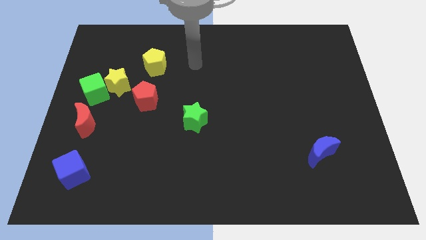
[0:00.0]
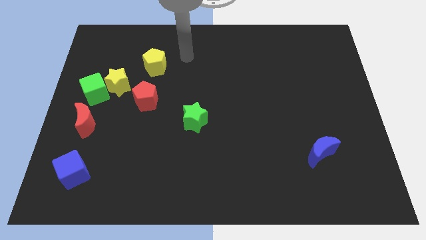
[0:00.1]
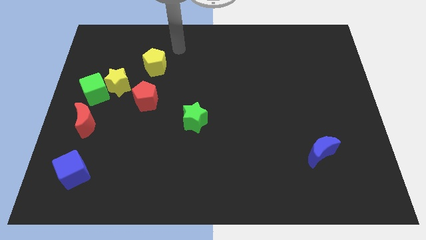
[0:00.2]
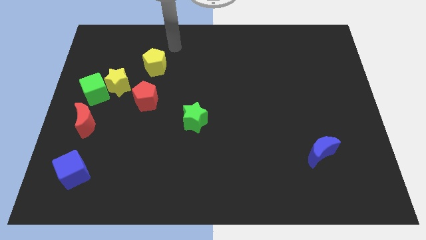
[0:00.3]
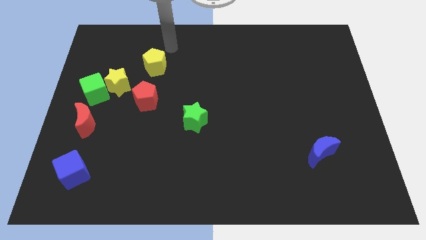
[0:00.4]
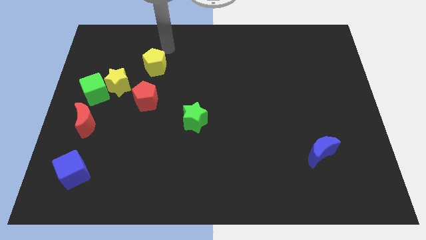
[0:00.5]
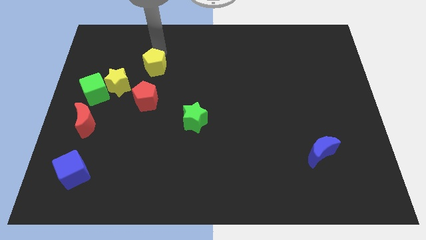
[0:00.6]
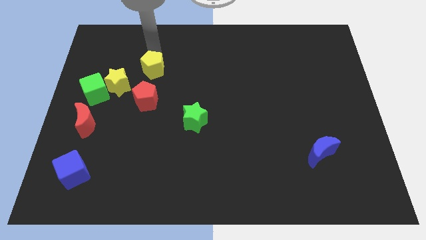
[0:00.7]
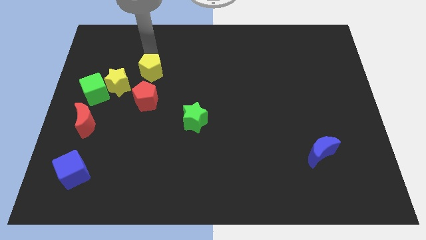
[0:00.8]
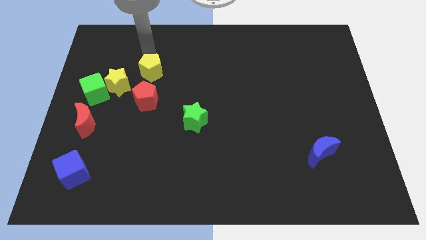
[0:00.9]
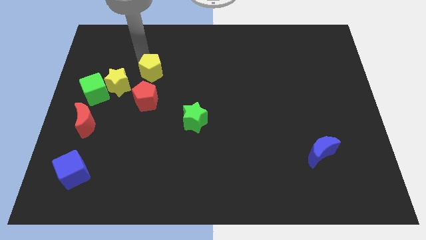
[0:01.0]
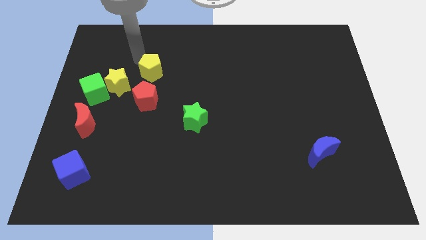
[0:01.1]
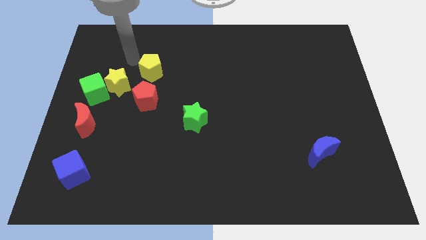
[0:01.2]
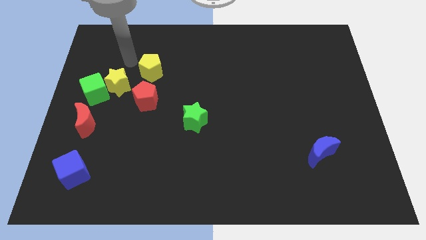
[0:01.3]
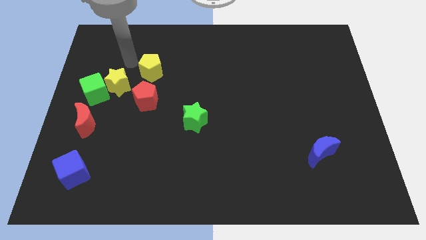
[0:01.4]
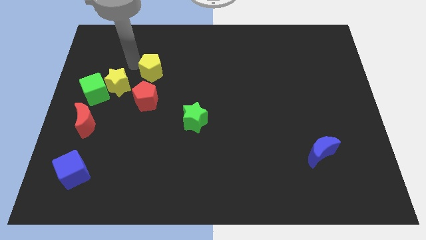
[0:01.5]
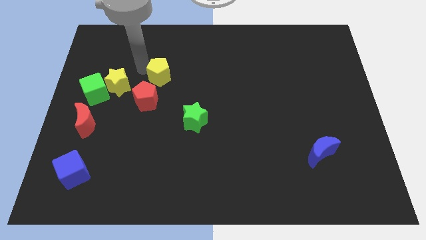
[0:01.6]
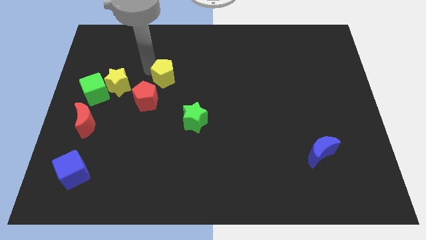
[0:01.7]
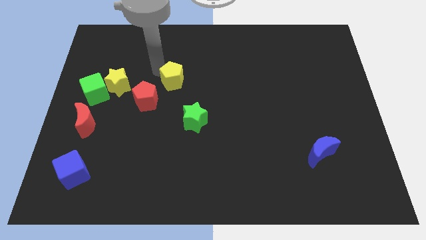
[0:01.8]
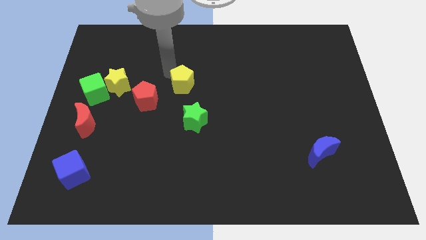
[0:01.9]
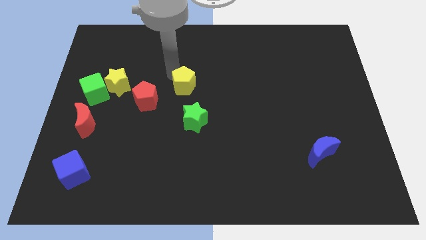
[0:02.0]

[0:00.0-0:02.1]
slide the yellow pentagon diagonally top right to the red pentagon

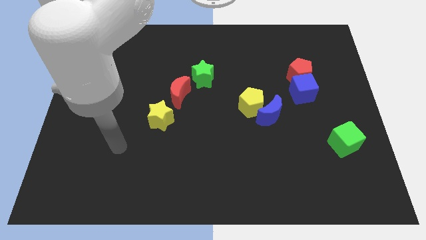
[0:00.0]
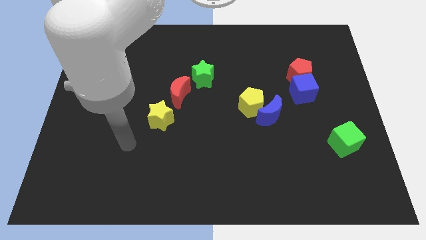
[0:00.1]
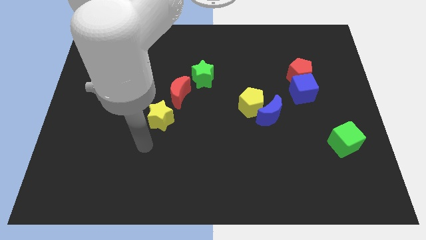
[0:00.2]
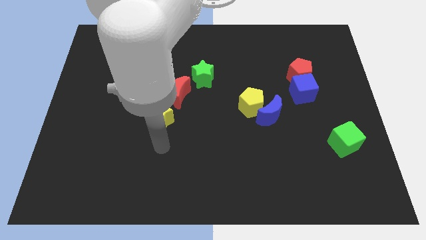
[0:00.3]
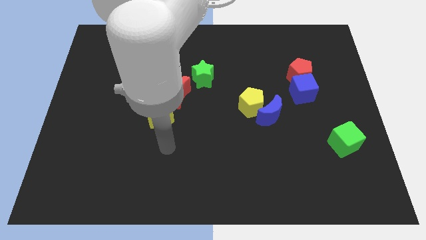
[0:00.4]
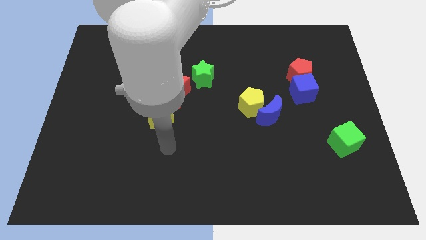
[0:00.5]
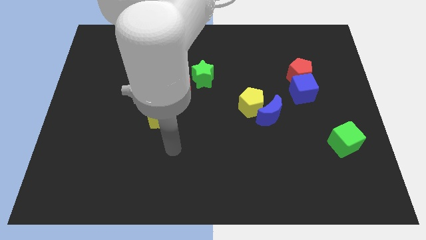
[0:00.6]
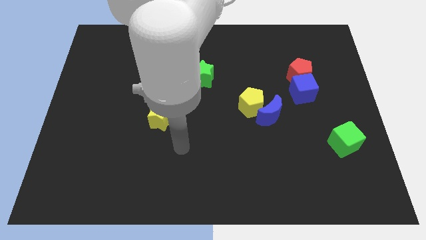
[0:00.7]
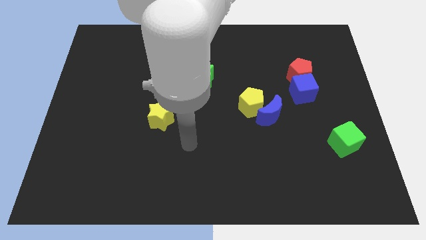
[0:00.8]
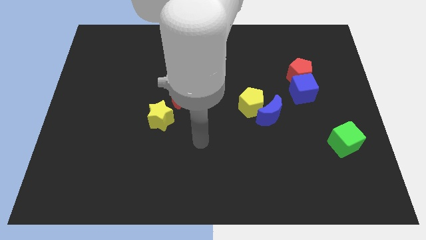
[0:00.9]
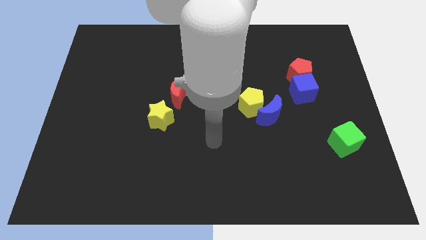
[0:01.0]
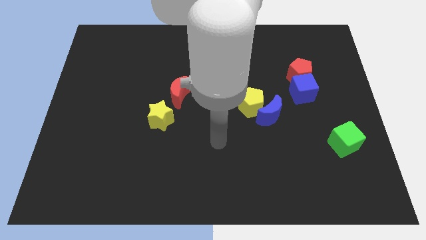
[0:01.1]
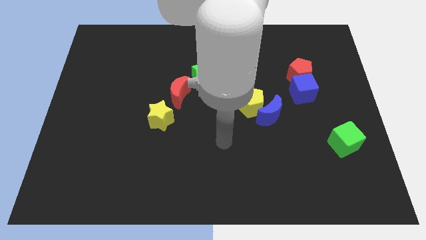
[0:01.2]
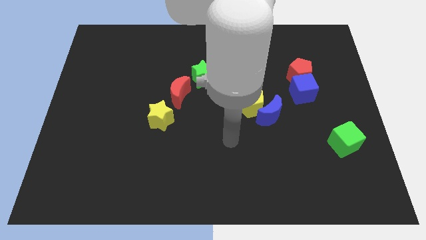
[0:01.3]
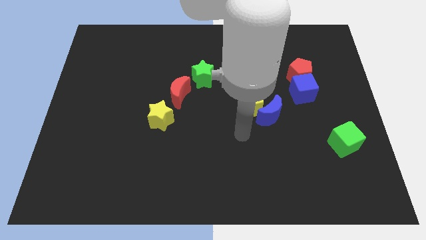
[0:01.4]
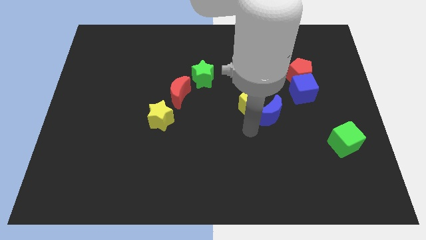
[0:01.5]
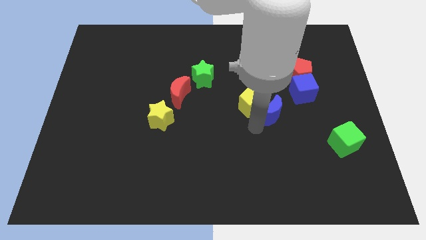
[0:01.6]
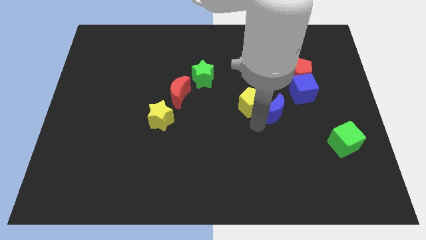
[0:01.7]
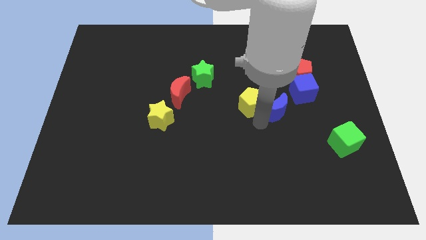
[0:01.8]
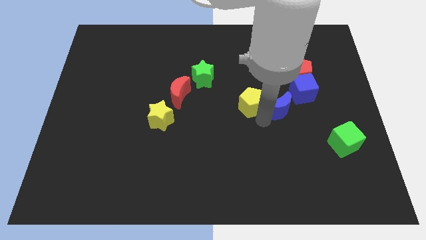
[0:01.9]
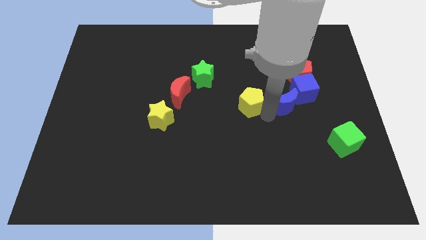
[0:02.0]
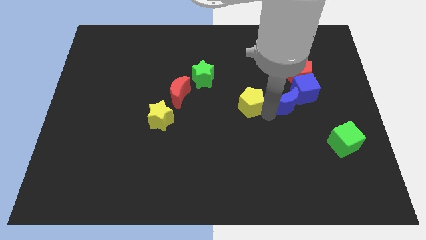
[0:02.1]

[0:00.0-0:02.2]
place the blue cube in between the yellow pentagon and the blue cube

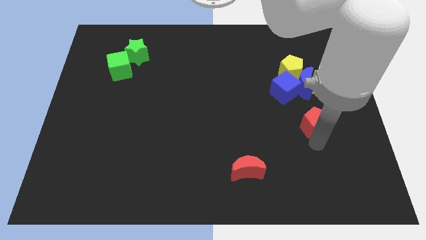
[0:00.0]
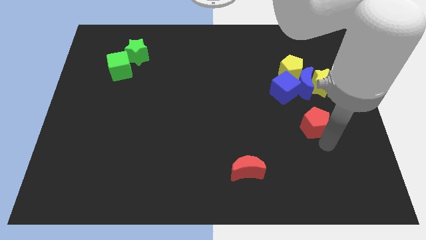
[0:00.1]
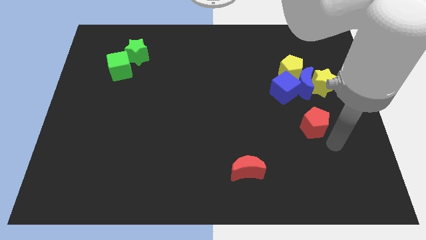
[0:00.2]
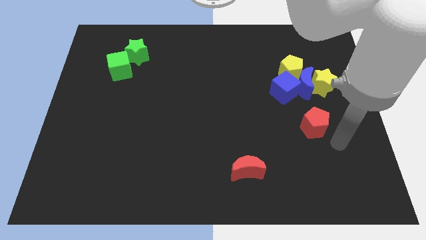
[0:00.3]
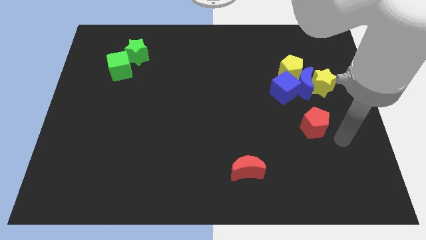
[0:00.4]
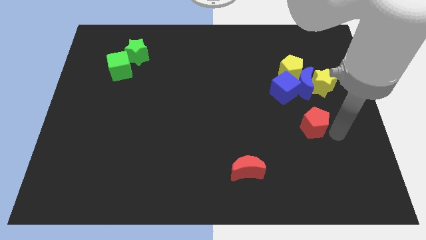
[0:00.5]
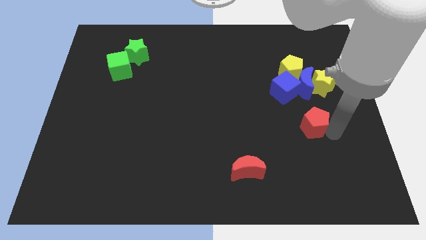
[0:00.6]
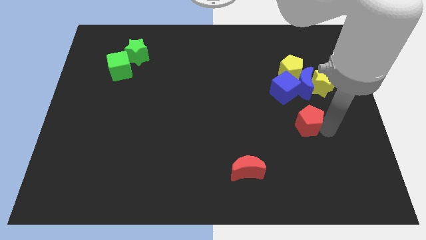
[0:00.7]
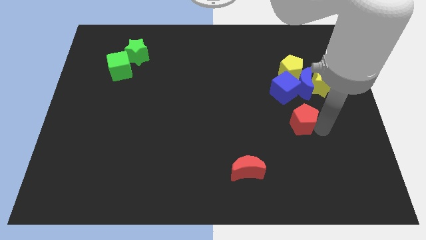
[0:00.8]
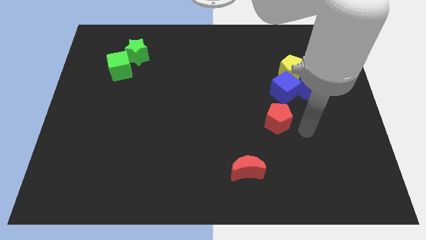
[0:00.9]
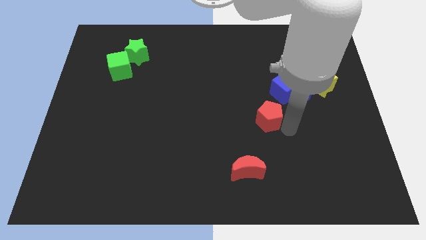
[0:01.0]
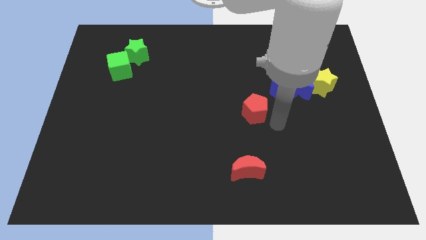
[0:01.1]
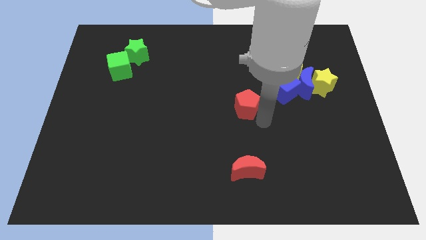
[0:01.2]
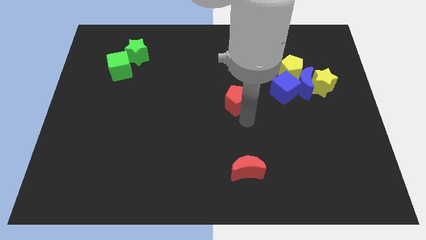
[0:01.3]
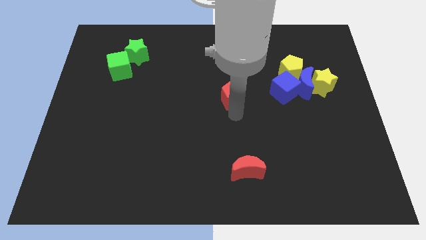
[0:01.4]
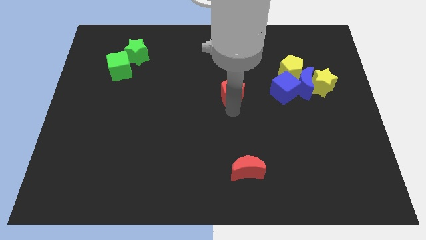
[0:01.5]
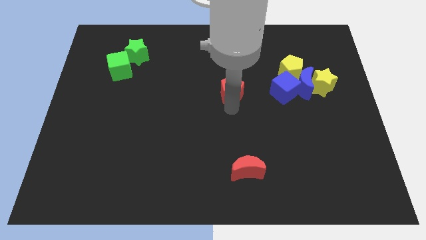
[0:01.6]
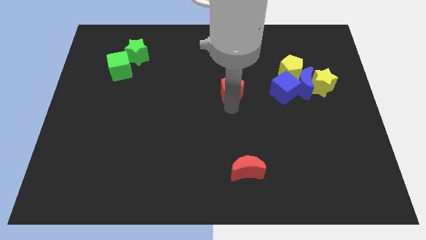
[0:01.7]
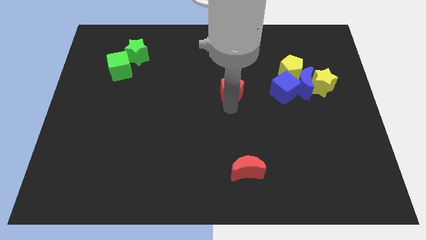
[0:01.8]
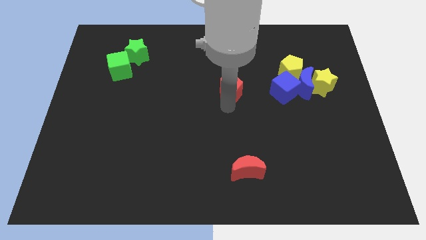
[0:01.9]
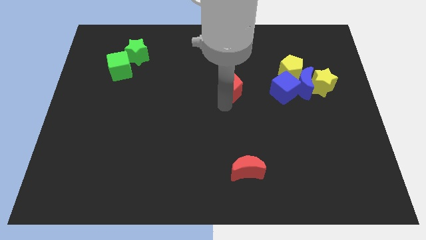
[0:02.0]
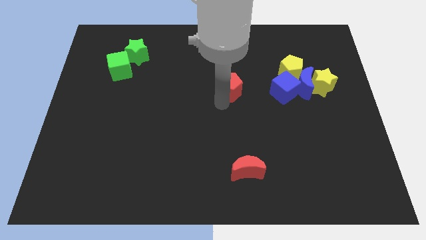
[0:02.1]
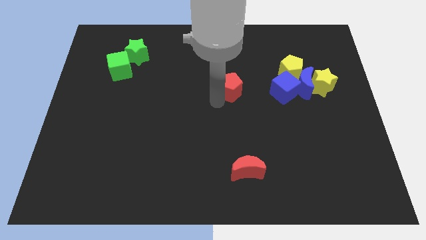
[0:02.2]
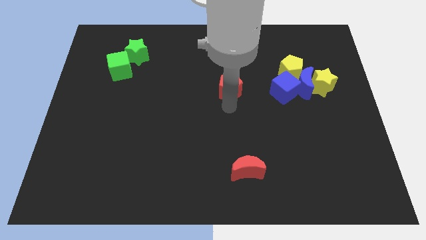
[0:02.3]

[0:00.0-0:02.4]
push the red pentagon to the left of the blue cube

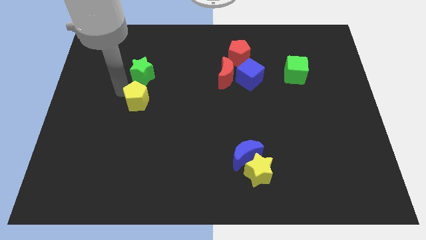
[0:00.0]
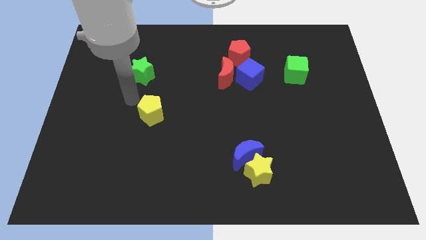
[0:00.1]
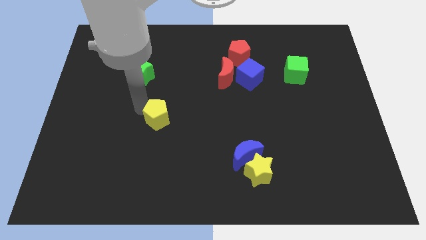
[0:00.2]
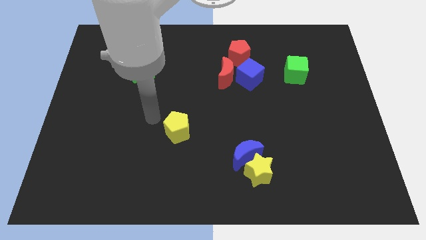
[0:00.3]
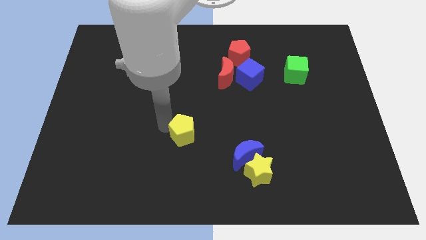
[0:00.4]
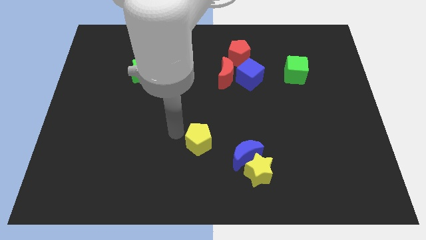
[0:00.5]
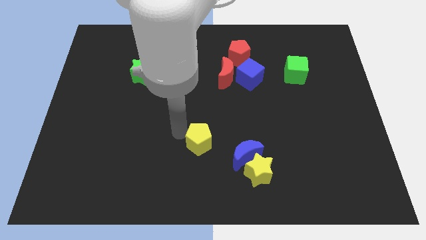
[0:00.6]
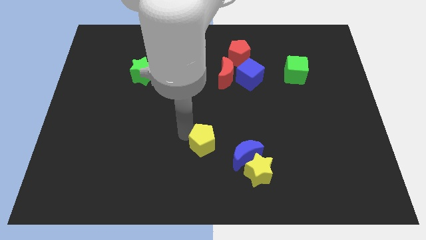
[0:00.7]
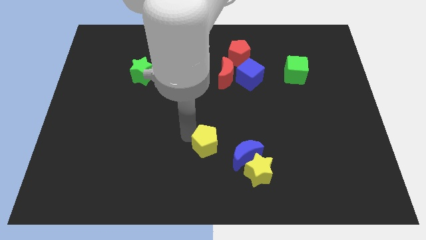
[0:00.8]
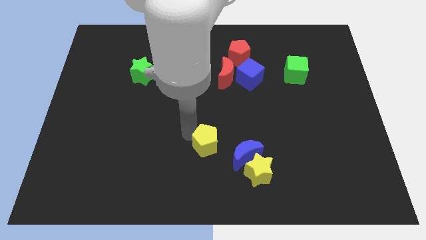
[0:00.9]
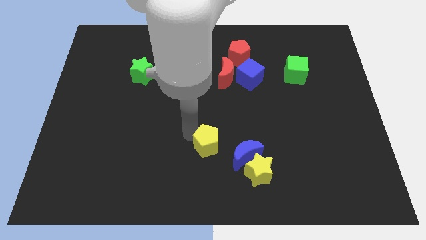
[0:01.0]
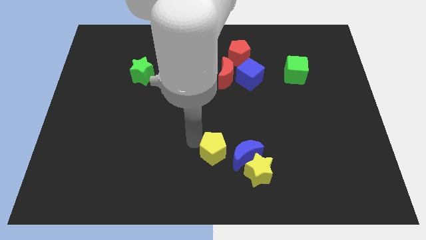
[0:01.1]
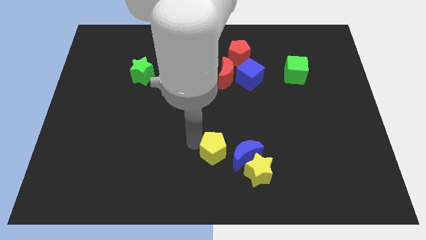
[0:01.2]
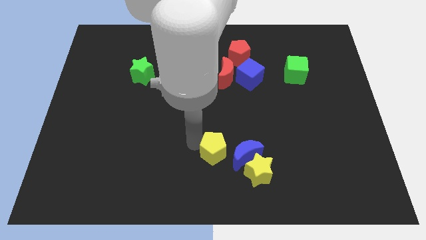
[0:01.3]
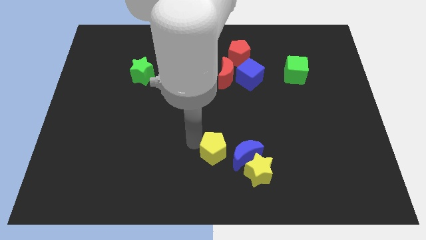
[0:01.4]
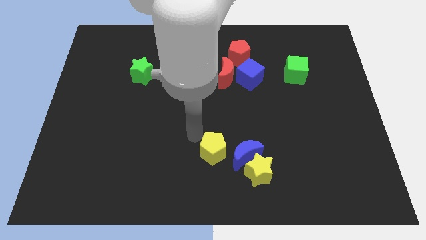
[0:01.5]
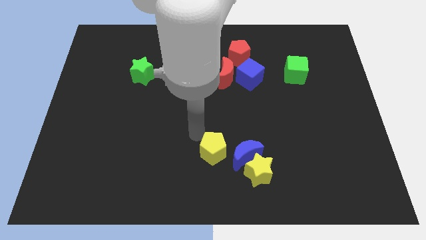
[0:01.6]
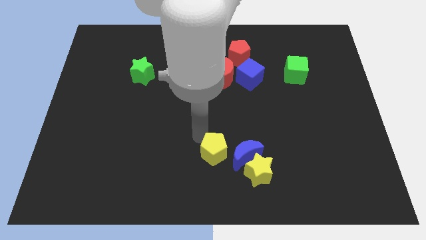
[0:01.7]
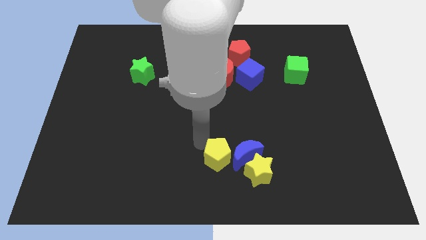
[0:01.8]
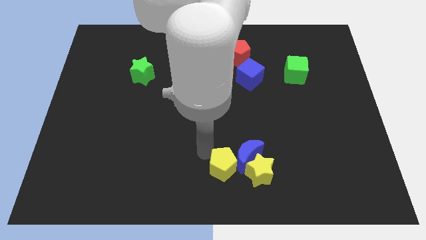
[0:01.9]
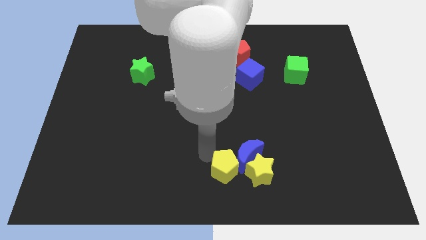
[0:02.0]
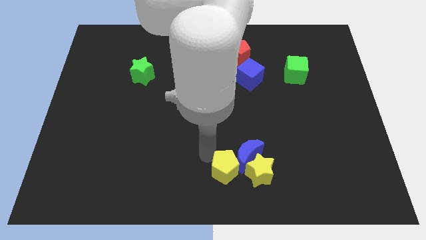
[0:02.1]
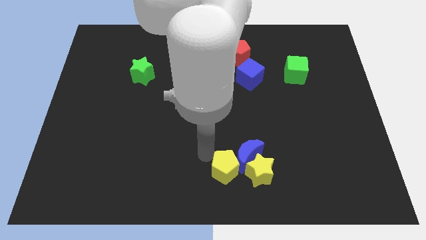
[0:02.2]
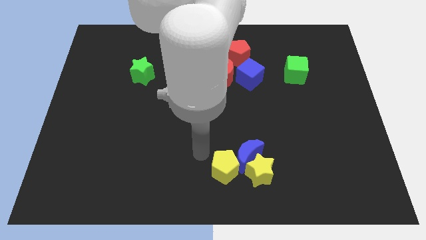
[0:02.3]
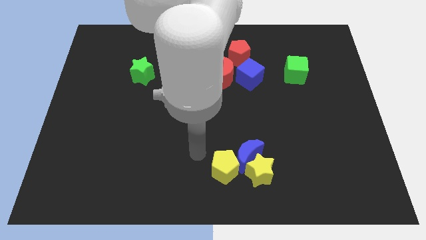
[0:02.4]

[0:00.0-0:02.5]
push the yellow pentagon towards the blue crescent
